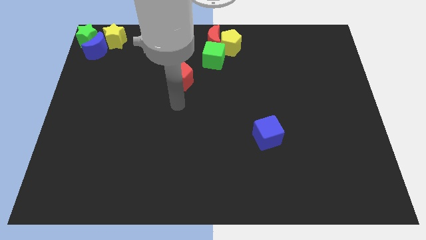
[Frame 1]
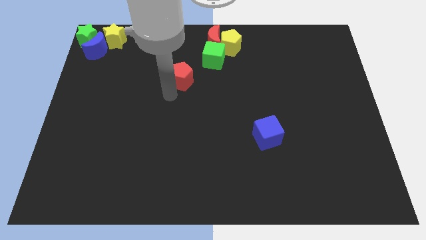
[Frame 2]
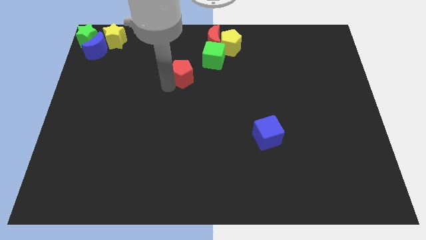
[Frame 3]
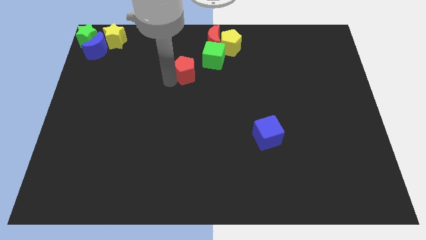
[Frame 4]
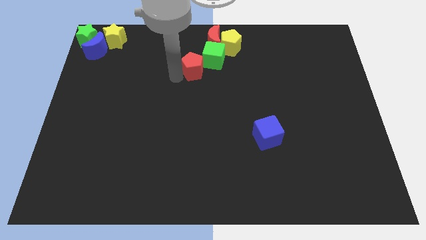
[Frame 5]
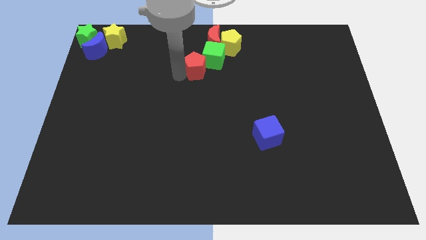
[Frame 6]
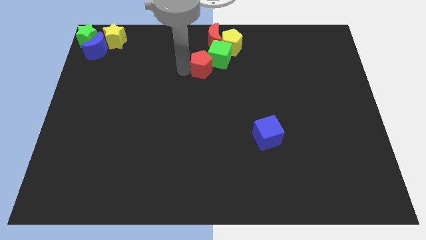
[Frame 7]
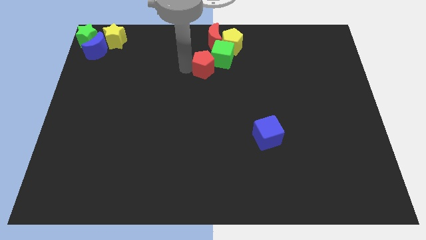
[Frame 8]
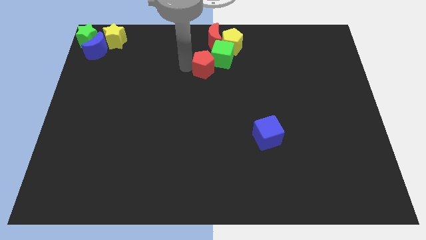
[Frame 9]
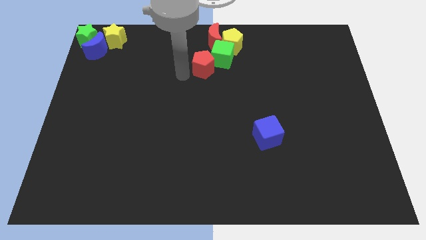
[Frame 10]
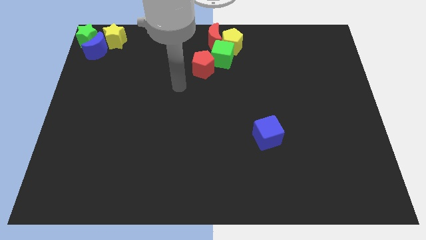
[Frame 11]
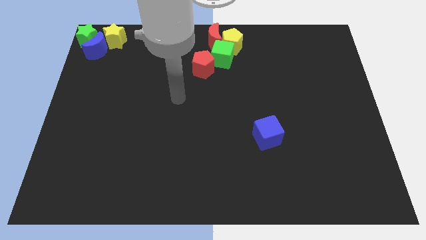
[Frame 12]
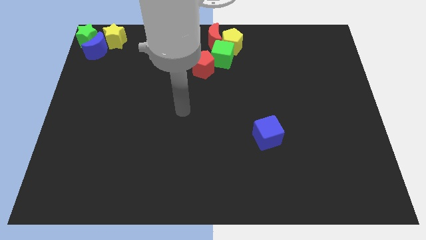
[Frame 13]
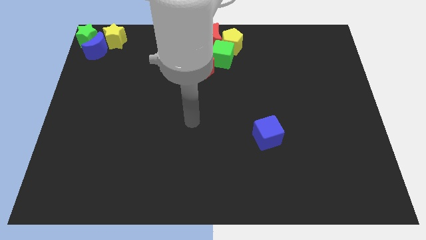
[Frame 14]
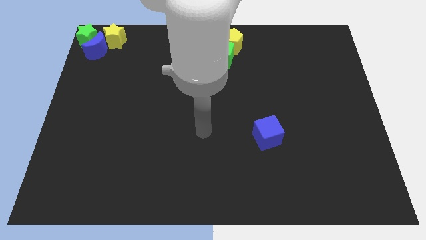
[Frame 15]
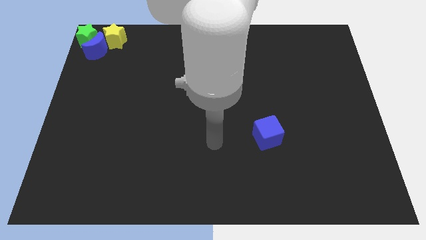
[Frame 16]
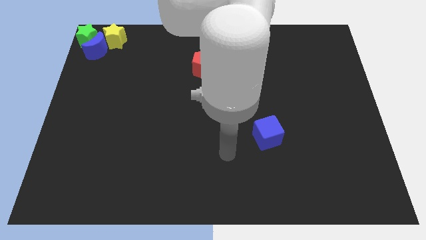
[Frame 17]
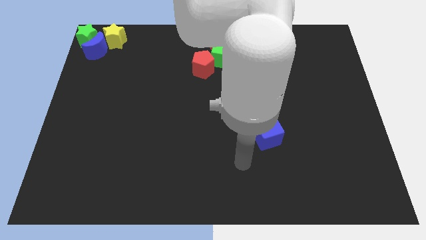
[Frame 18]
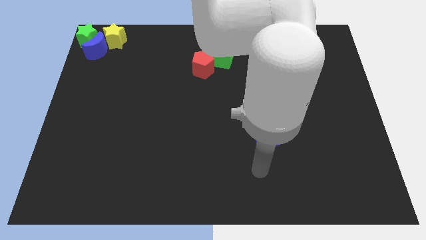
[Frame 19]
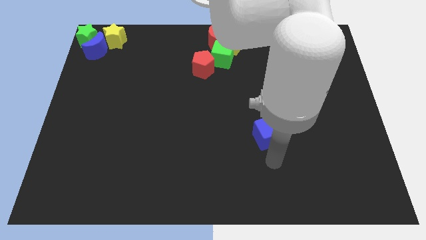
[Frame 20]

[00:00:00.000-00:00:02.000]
push red pentagon into green cube

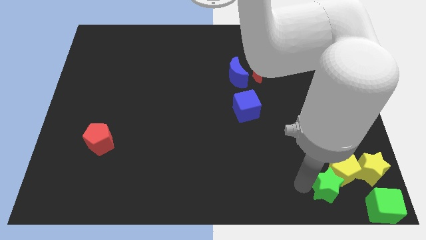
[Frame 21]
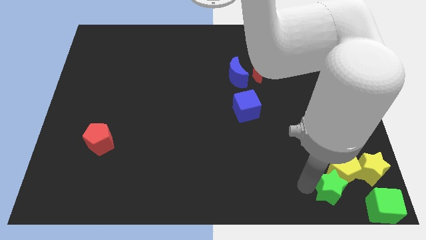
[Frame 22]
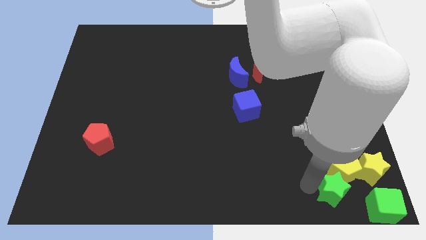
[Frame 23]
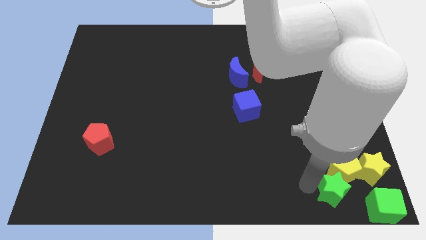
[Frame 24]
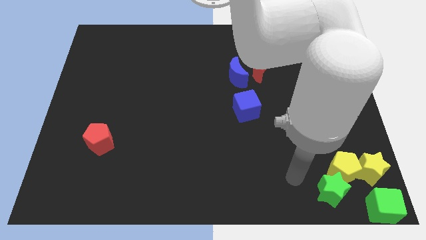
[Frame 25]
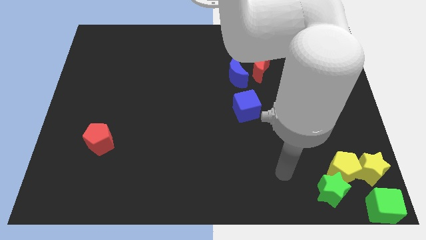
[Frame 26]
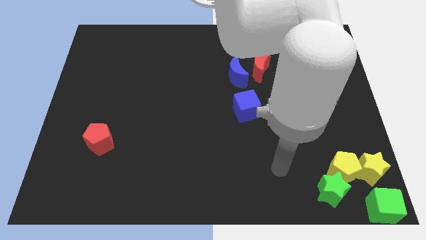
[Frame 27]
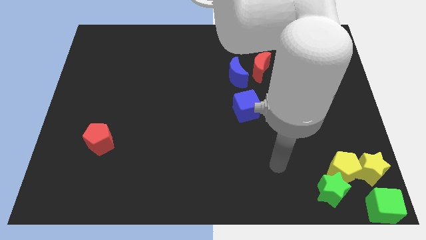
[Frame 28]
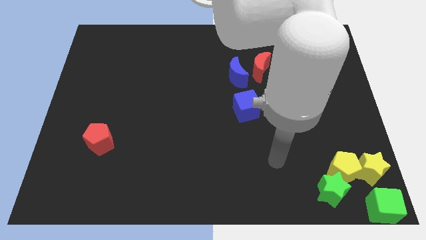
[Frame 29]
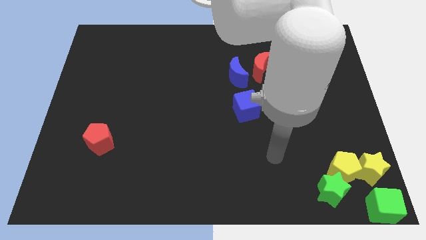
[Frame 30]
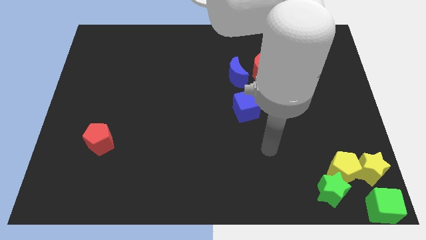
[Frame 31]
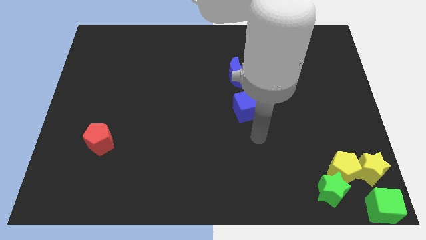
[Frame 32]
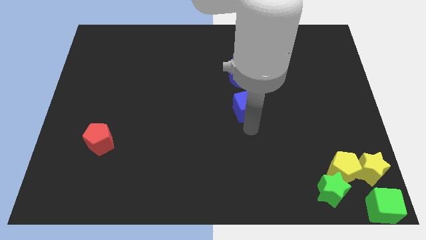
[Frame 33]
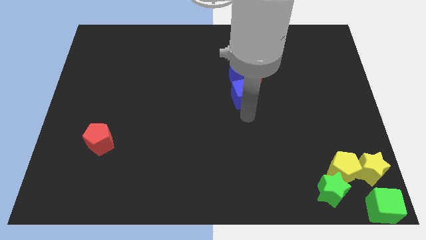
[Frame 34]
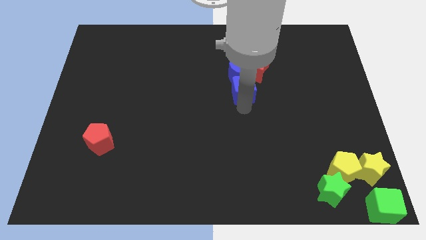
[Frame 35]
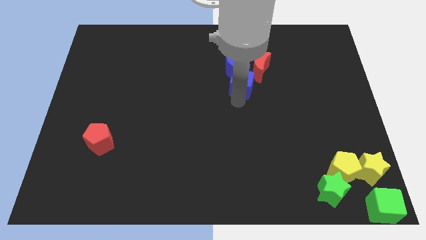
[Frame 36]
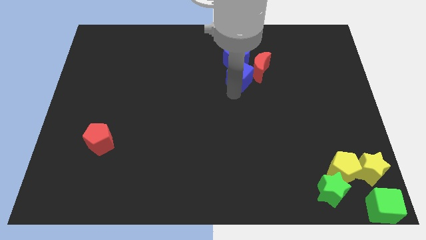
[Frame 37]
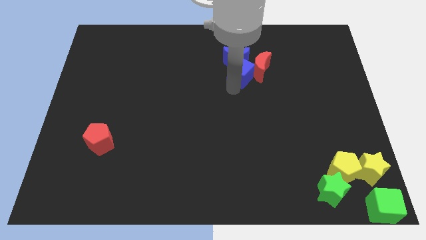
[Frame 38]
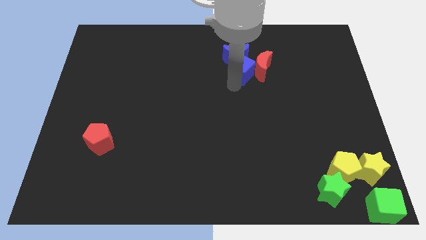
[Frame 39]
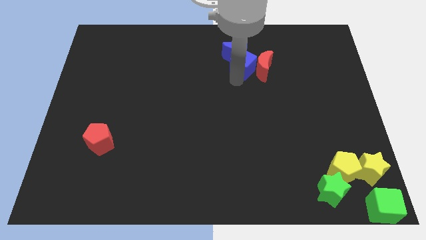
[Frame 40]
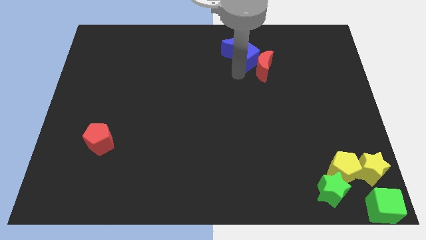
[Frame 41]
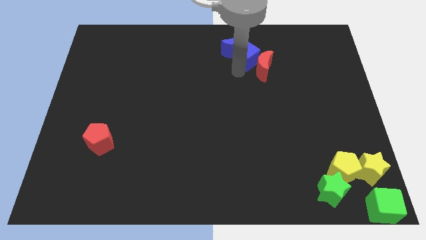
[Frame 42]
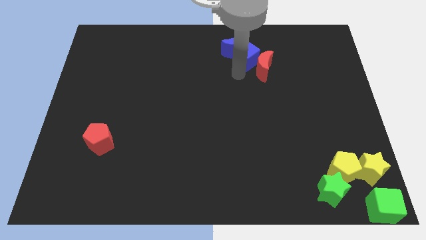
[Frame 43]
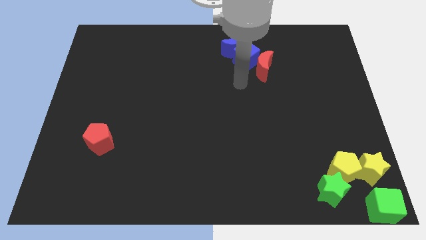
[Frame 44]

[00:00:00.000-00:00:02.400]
push blue cube between red moon and blue moon

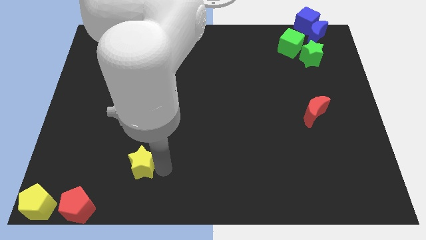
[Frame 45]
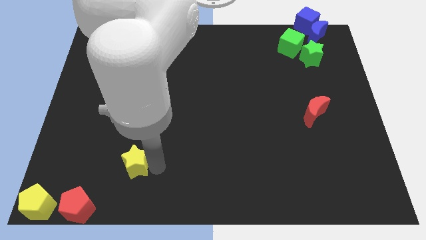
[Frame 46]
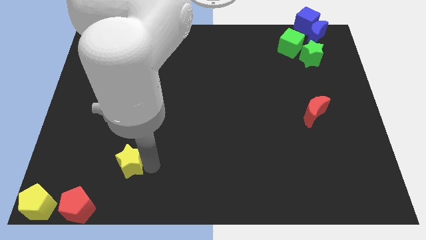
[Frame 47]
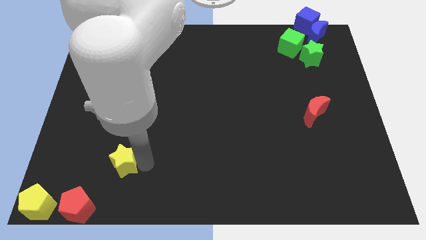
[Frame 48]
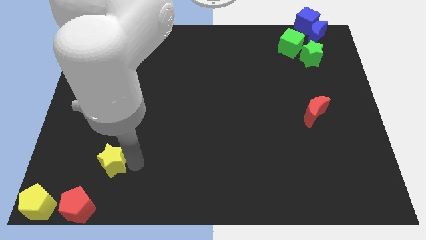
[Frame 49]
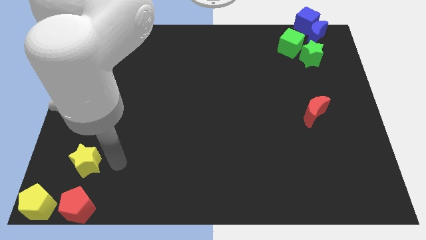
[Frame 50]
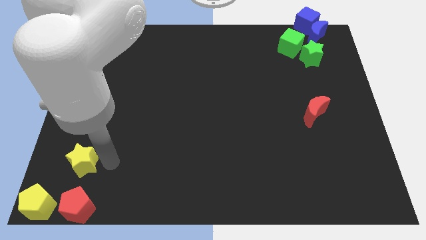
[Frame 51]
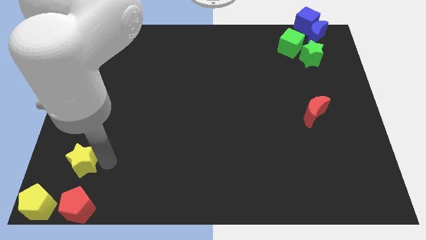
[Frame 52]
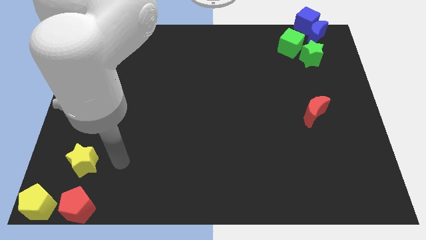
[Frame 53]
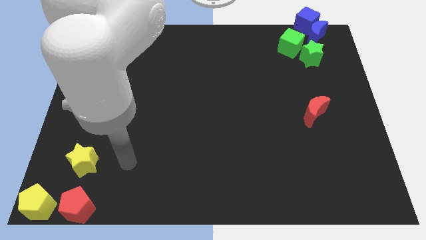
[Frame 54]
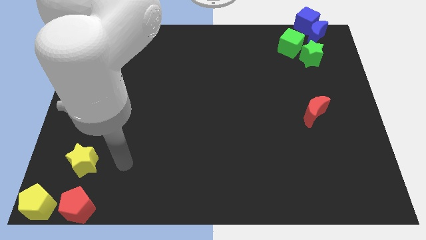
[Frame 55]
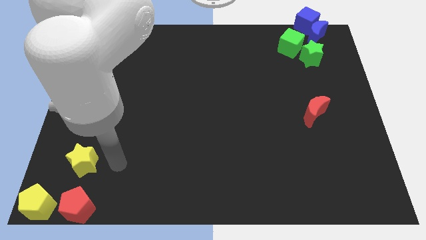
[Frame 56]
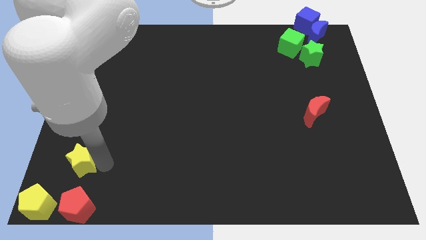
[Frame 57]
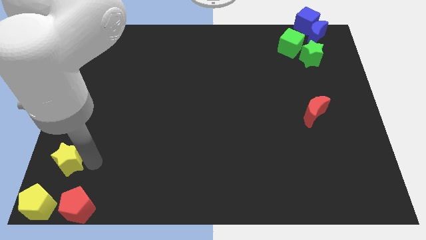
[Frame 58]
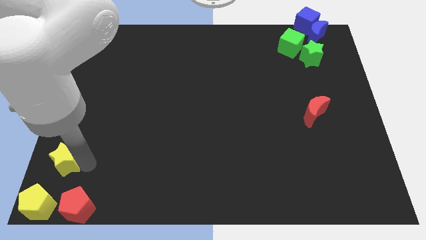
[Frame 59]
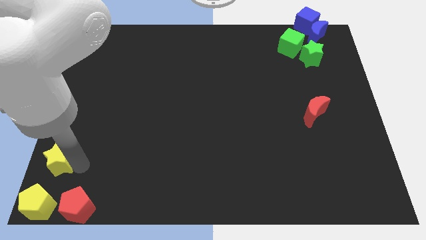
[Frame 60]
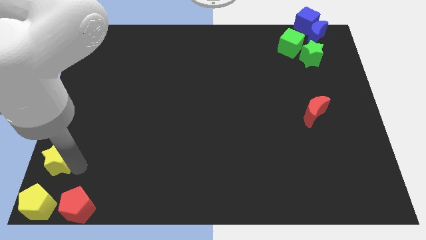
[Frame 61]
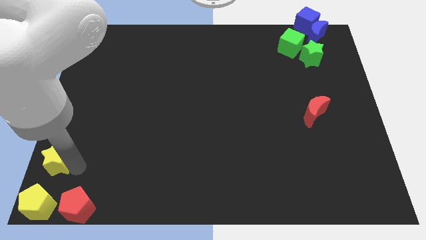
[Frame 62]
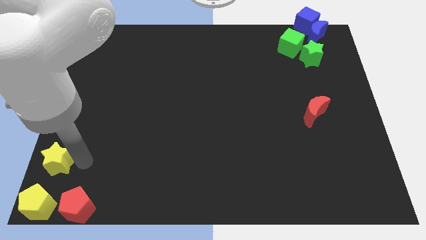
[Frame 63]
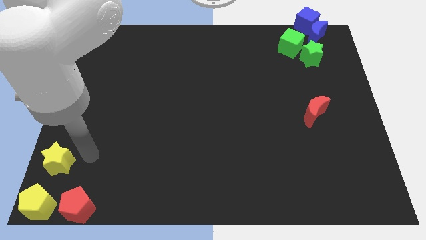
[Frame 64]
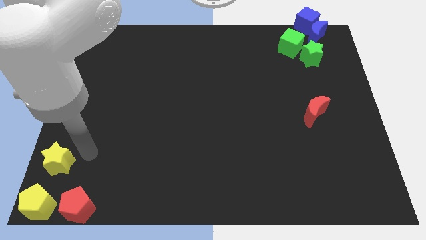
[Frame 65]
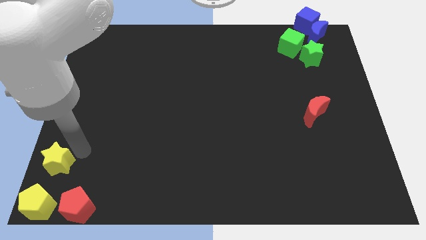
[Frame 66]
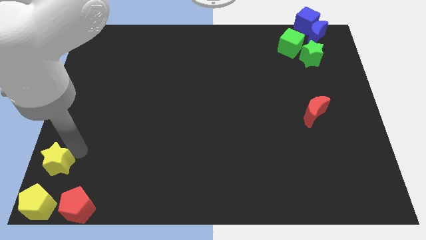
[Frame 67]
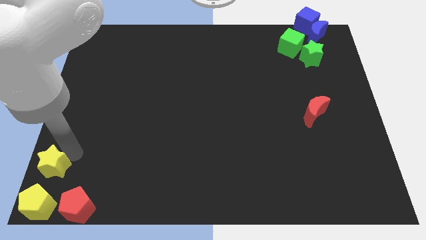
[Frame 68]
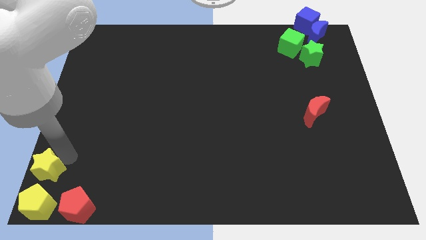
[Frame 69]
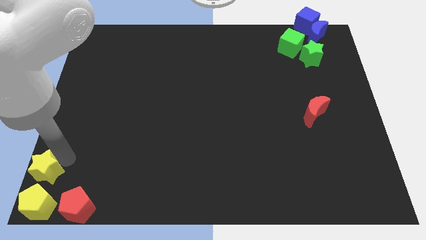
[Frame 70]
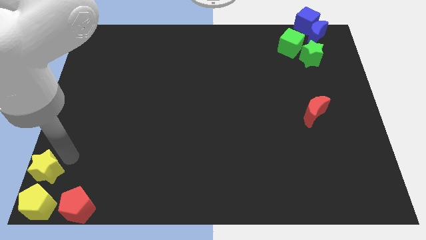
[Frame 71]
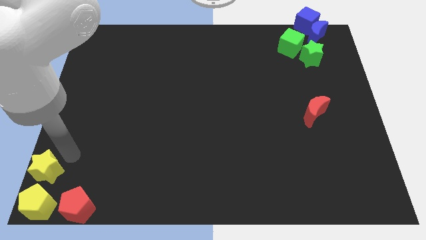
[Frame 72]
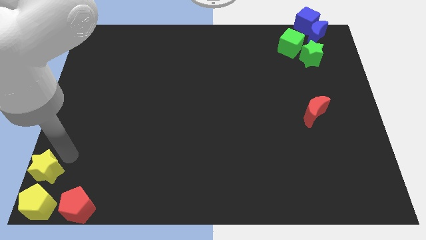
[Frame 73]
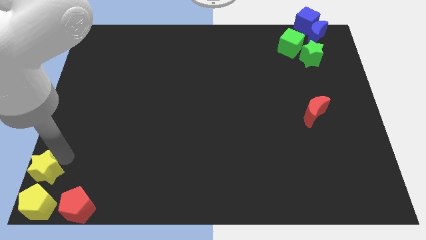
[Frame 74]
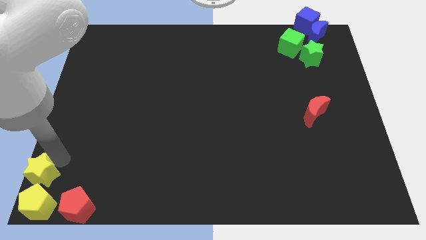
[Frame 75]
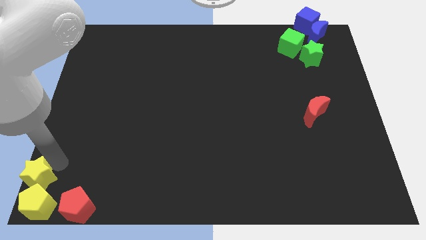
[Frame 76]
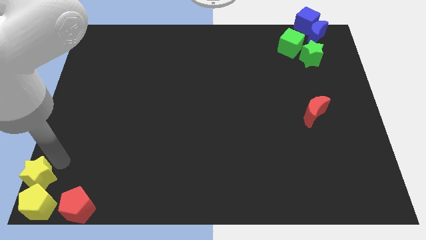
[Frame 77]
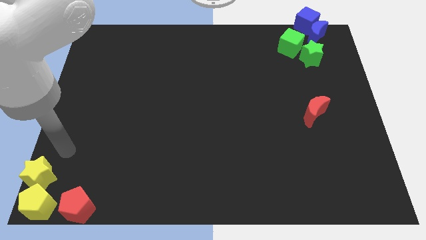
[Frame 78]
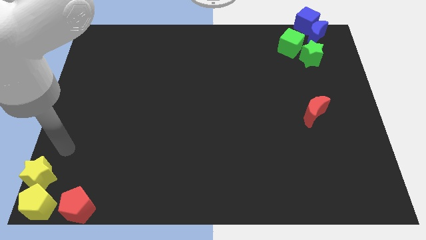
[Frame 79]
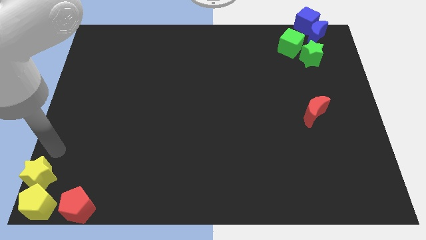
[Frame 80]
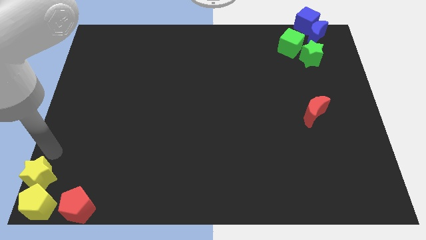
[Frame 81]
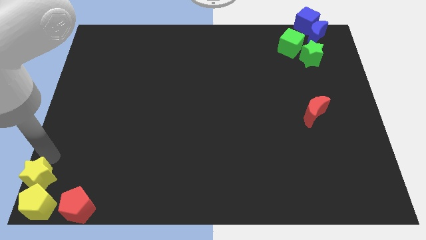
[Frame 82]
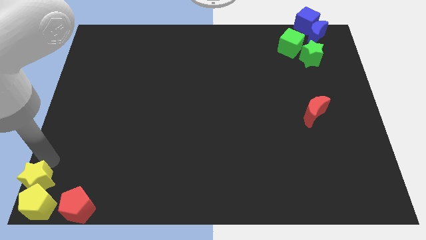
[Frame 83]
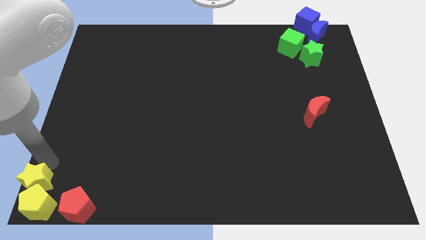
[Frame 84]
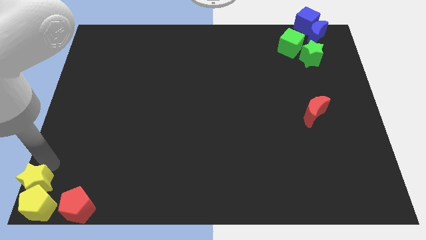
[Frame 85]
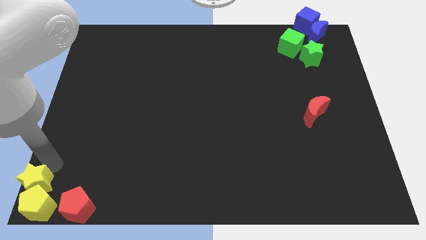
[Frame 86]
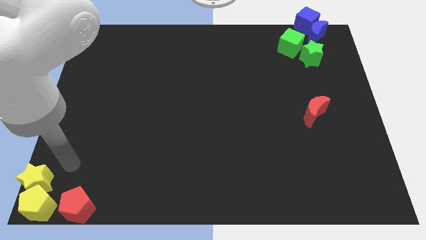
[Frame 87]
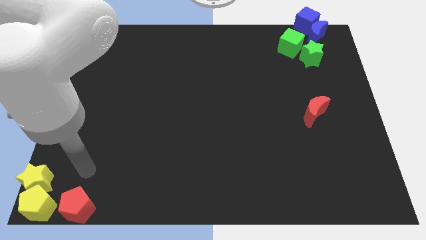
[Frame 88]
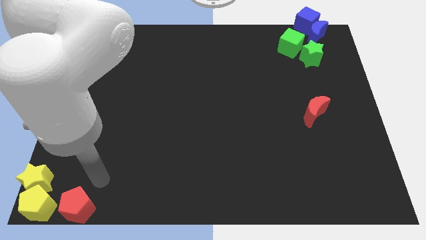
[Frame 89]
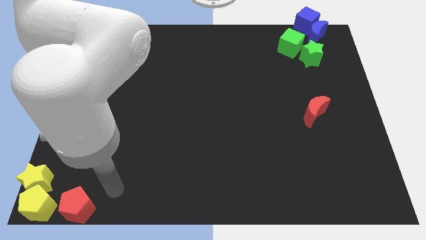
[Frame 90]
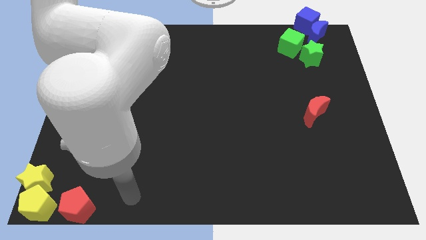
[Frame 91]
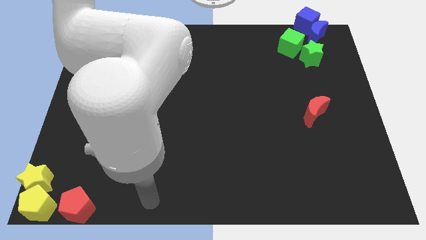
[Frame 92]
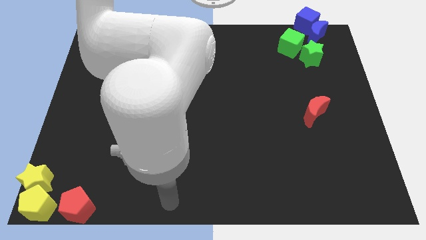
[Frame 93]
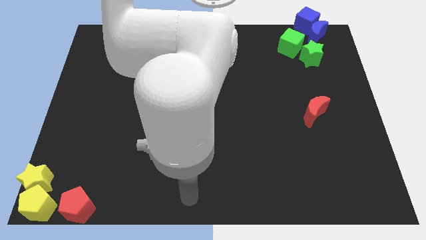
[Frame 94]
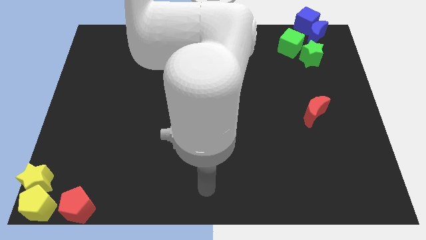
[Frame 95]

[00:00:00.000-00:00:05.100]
push the yellow star into the yellow pentagon
